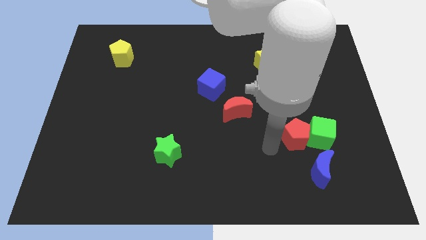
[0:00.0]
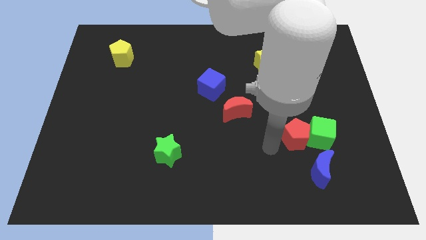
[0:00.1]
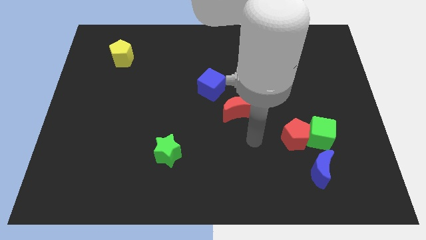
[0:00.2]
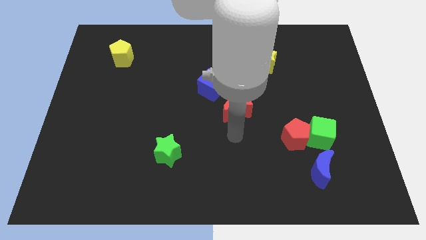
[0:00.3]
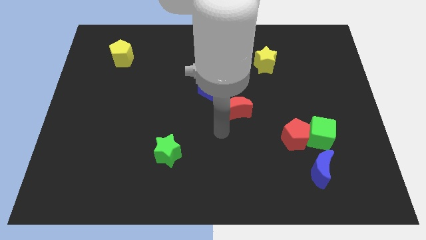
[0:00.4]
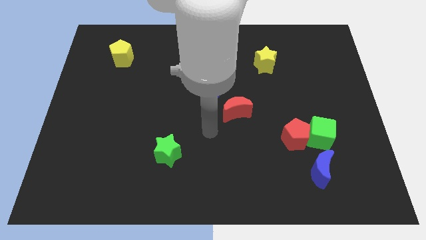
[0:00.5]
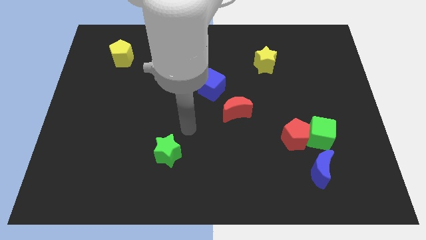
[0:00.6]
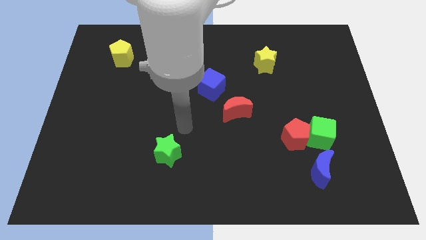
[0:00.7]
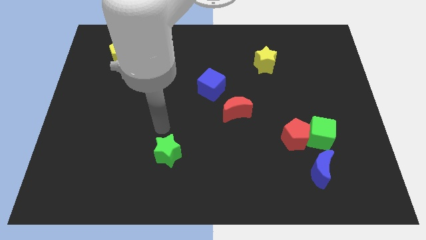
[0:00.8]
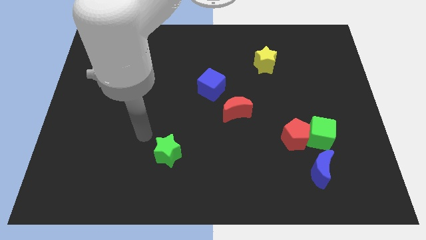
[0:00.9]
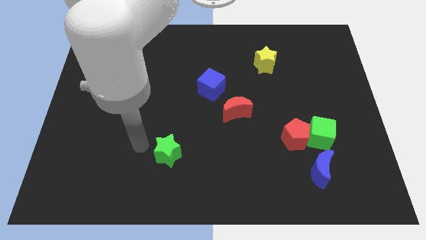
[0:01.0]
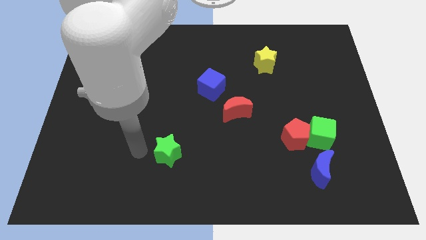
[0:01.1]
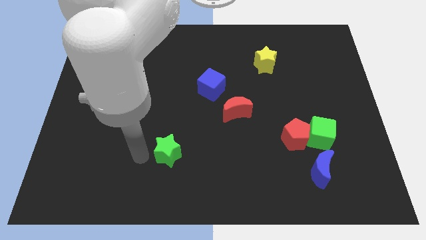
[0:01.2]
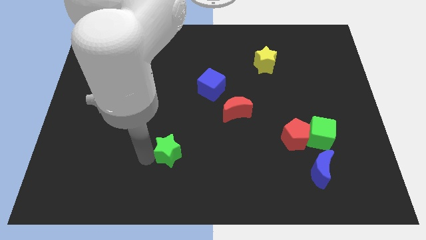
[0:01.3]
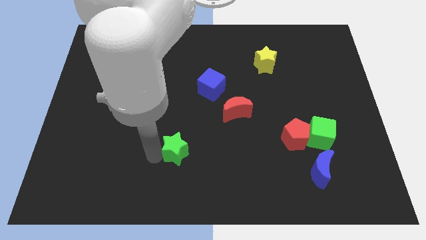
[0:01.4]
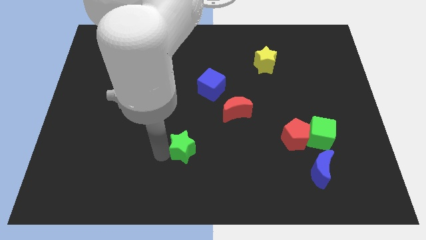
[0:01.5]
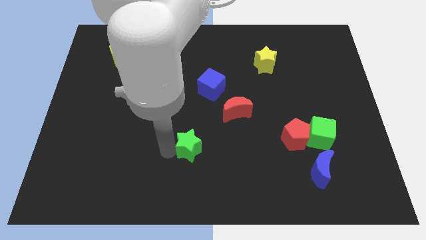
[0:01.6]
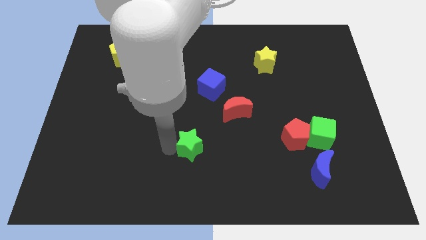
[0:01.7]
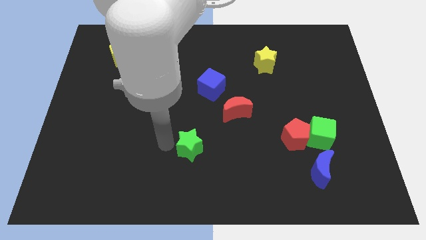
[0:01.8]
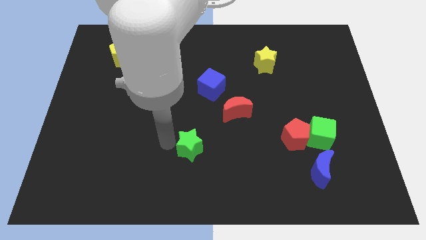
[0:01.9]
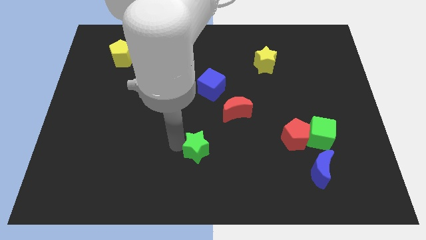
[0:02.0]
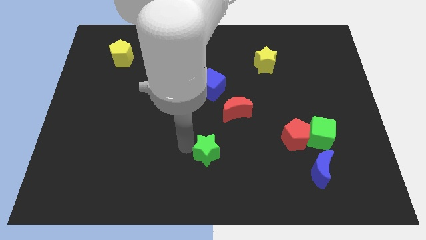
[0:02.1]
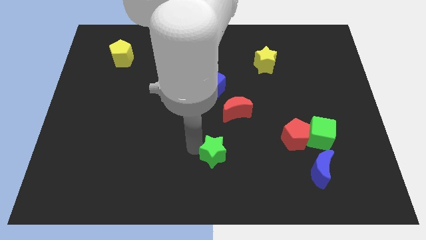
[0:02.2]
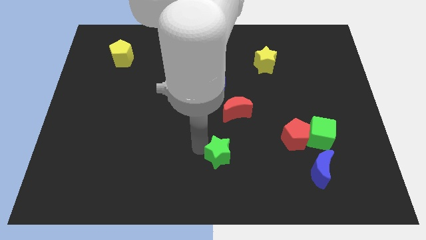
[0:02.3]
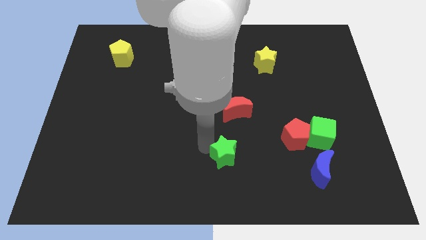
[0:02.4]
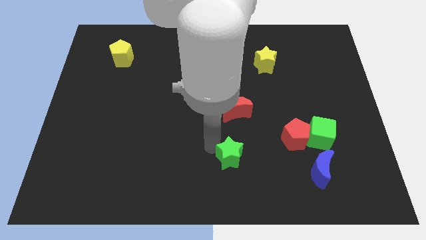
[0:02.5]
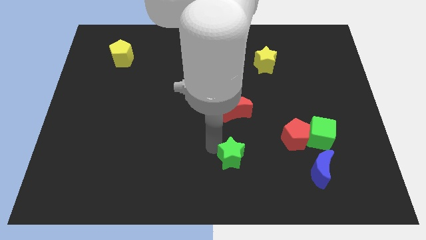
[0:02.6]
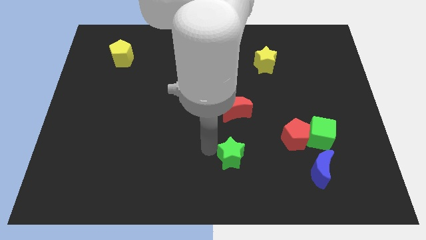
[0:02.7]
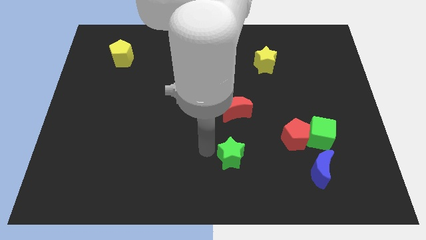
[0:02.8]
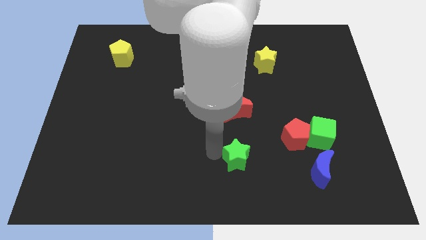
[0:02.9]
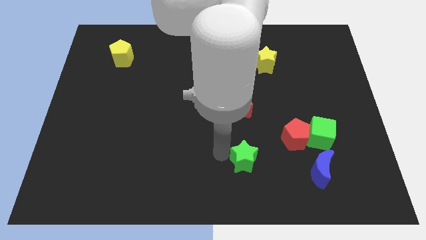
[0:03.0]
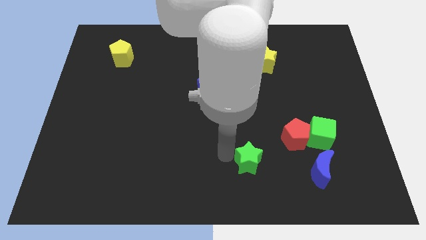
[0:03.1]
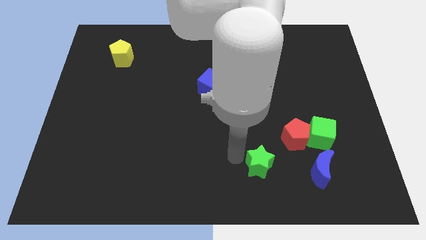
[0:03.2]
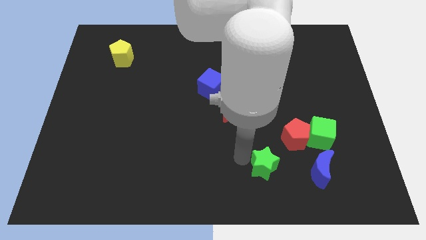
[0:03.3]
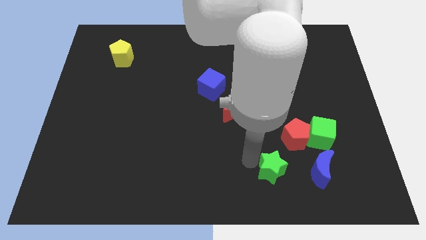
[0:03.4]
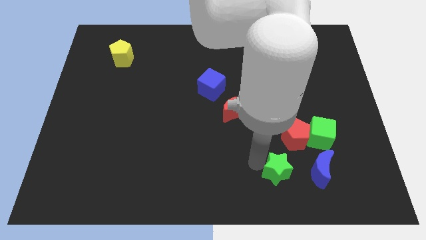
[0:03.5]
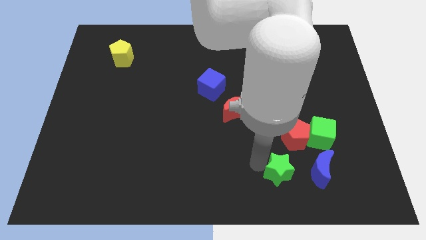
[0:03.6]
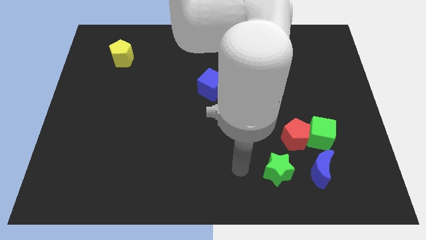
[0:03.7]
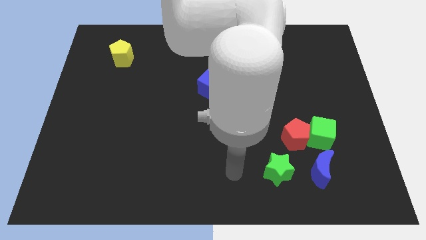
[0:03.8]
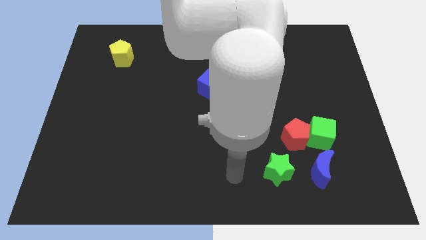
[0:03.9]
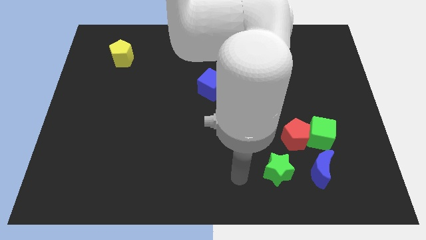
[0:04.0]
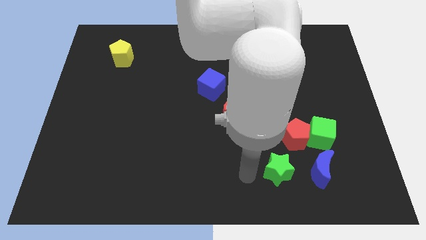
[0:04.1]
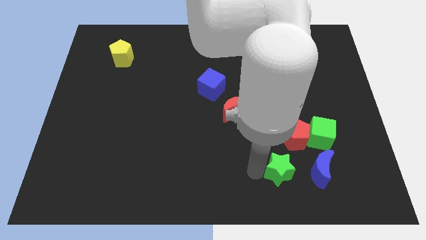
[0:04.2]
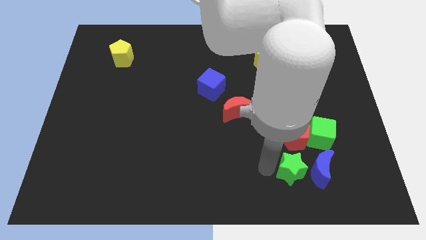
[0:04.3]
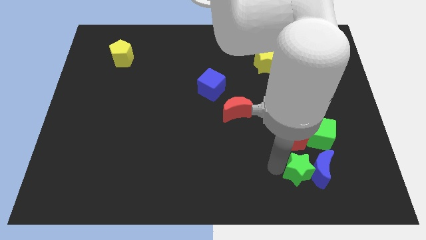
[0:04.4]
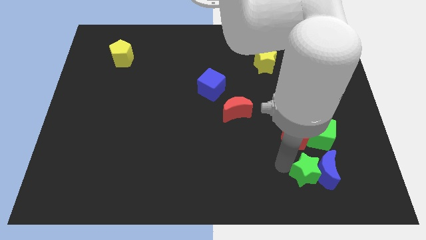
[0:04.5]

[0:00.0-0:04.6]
push the green star next to the blue moon

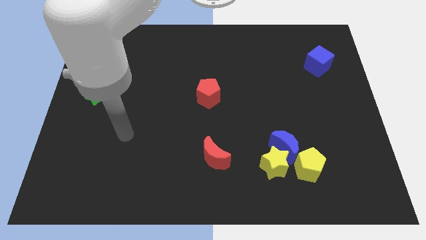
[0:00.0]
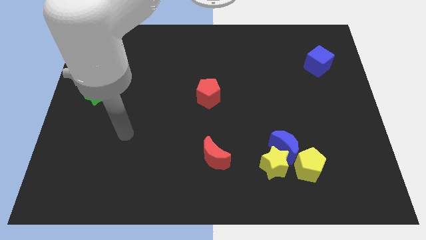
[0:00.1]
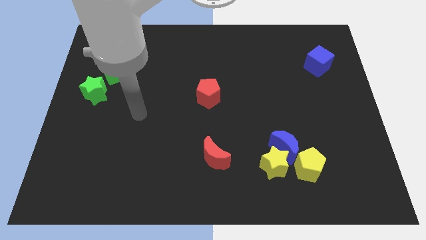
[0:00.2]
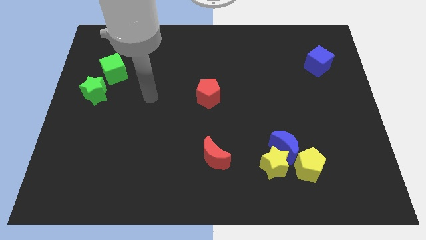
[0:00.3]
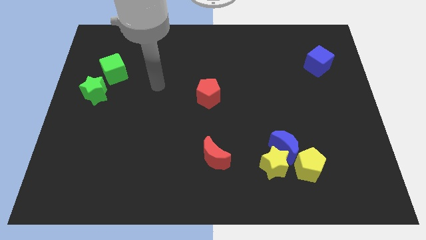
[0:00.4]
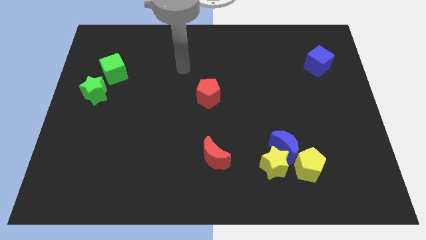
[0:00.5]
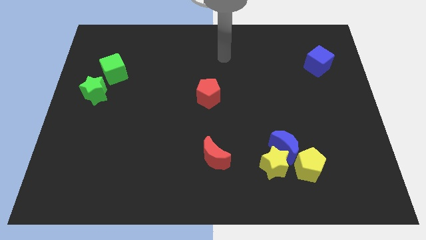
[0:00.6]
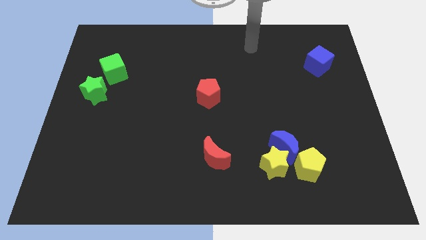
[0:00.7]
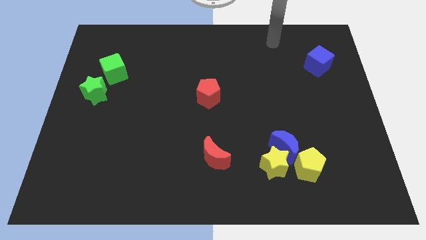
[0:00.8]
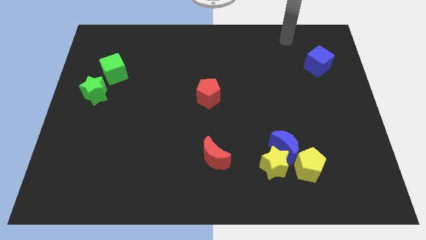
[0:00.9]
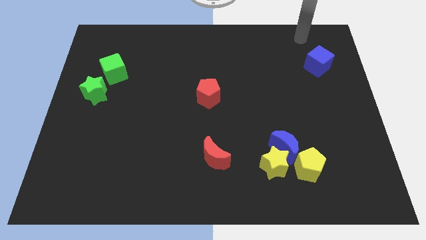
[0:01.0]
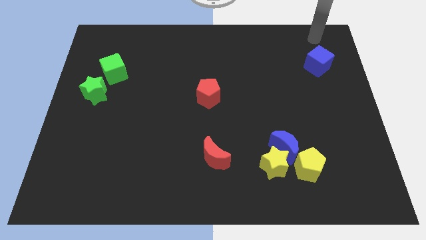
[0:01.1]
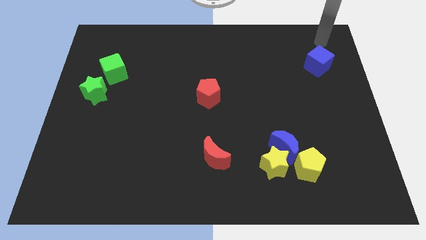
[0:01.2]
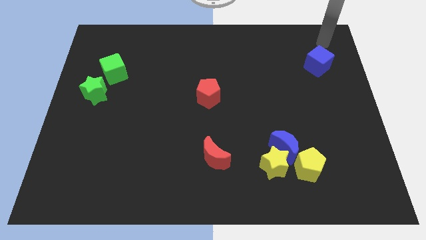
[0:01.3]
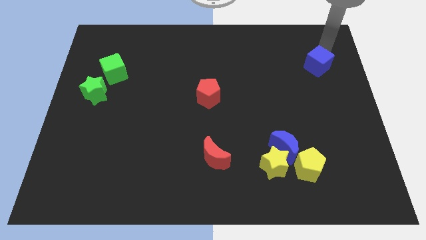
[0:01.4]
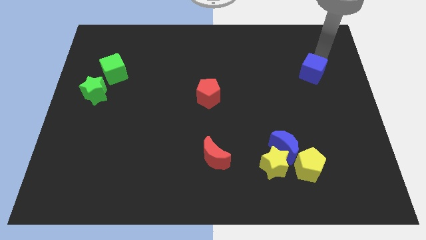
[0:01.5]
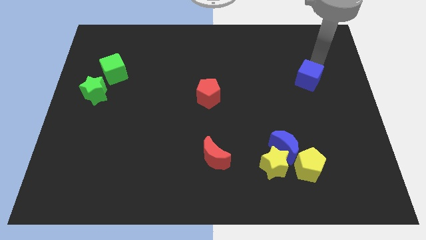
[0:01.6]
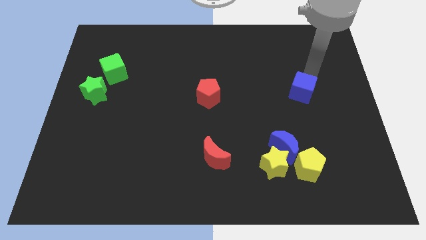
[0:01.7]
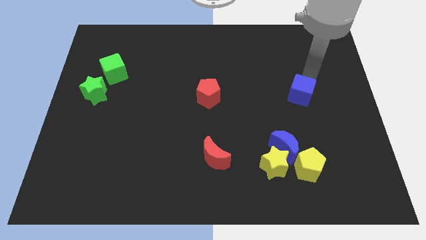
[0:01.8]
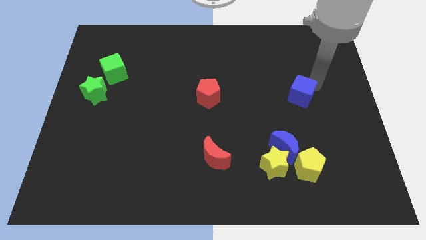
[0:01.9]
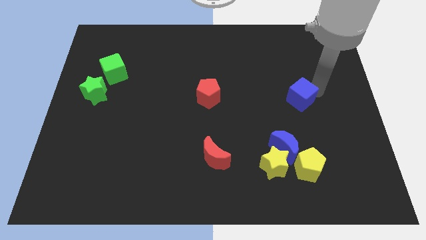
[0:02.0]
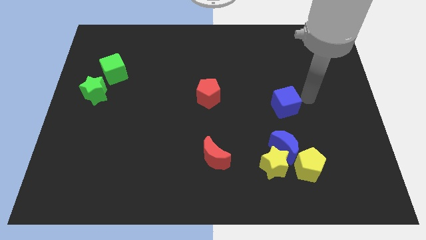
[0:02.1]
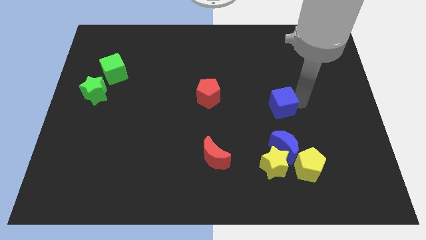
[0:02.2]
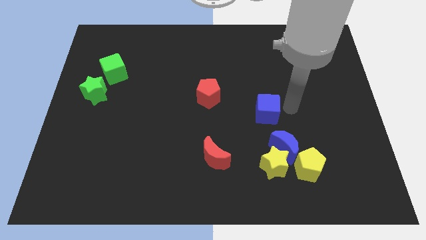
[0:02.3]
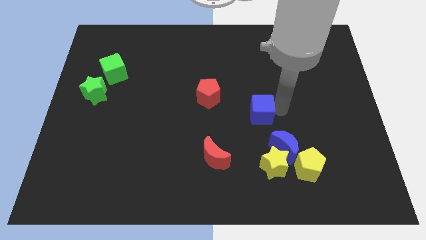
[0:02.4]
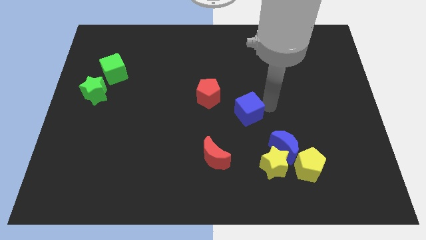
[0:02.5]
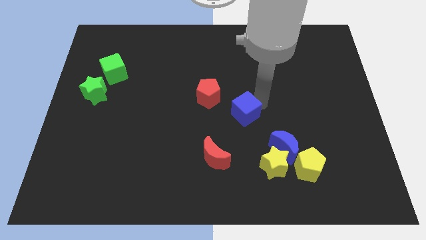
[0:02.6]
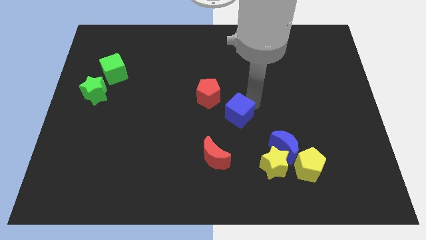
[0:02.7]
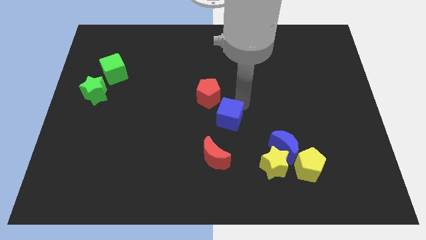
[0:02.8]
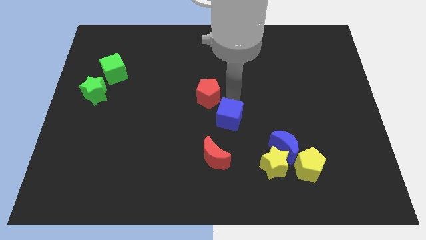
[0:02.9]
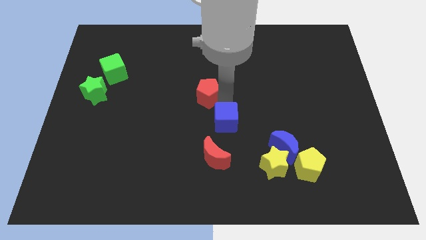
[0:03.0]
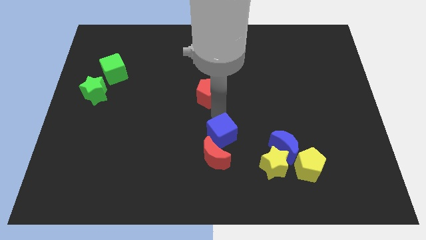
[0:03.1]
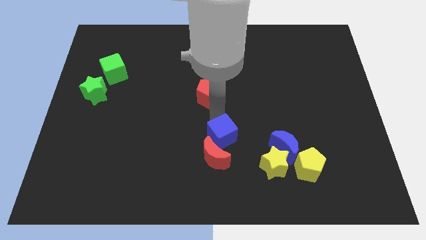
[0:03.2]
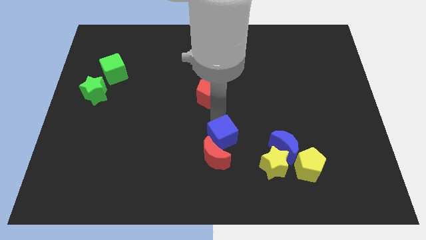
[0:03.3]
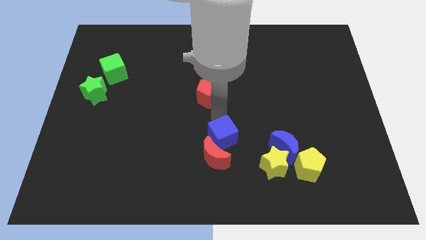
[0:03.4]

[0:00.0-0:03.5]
put the blue cube next to the red moon

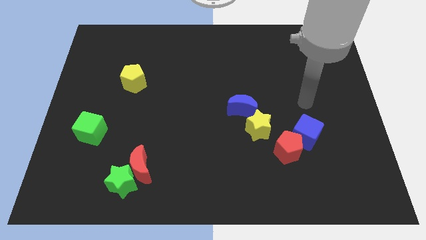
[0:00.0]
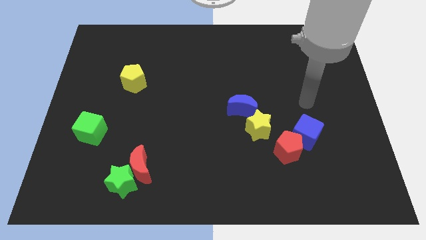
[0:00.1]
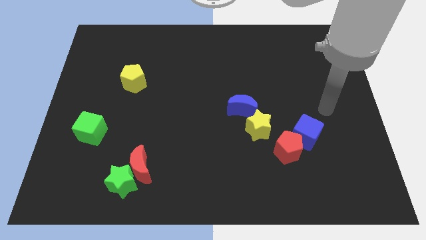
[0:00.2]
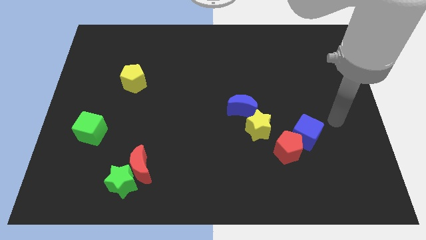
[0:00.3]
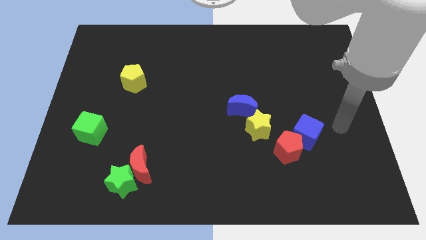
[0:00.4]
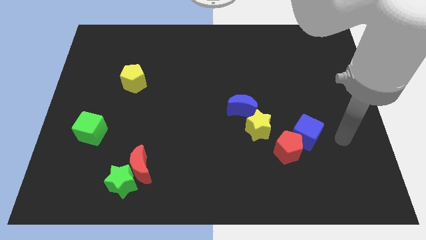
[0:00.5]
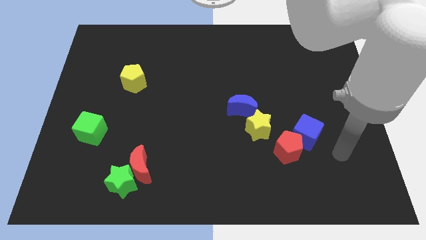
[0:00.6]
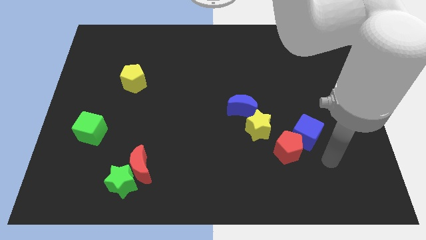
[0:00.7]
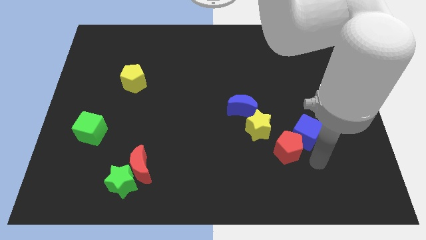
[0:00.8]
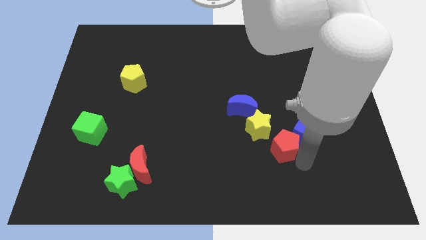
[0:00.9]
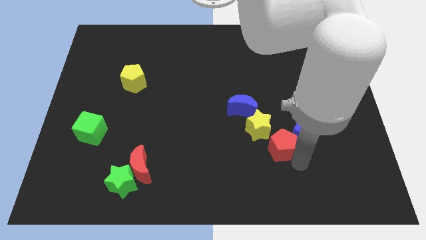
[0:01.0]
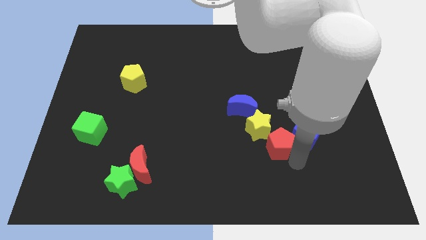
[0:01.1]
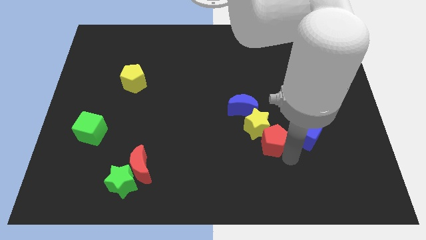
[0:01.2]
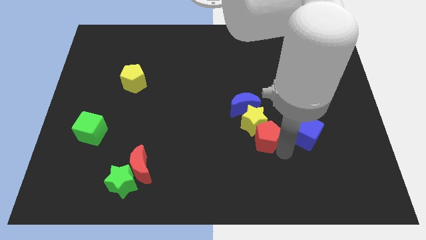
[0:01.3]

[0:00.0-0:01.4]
push the red pentagon close to the yellow star
